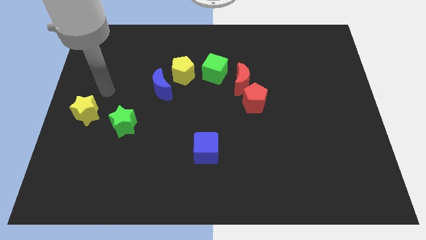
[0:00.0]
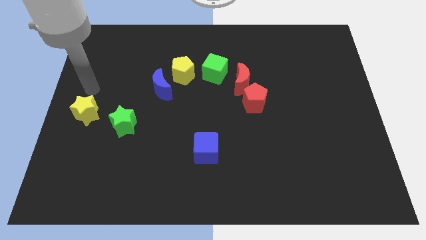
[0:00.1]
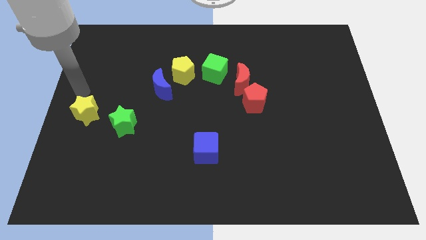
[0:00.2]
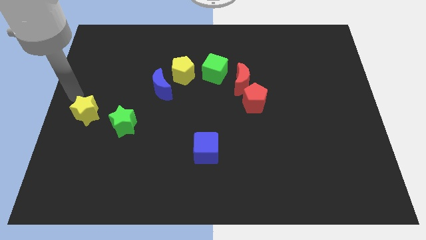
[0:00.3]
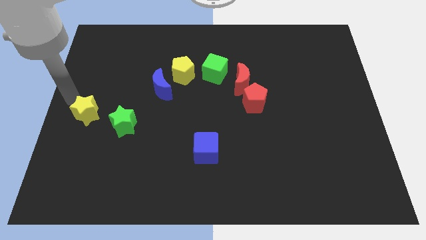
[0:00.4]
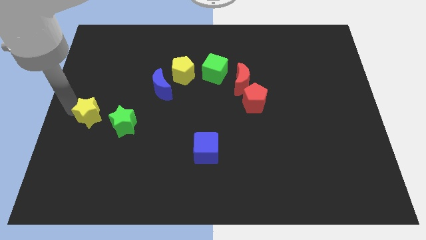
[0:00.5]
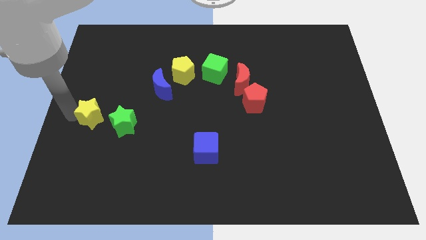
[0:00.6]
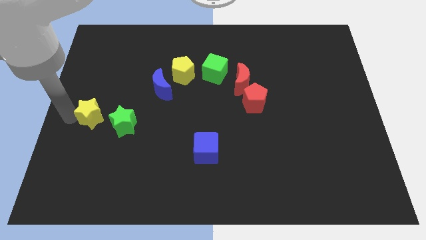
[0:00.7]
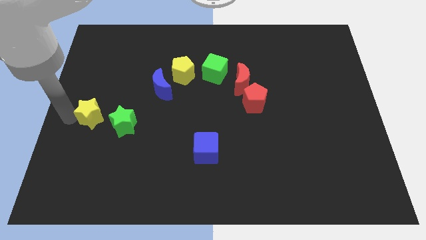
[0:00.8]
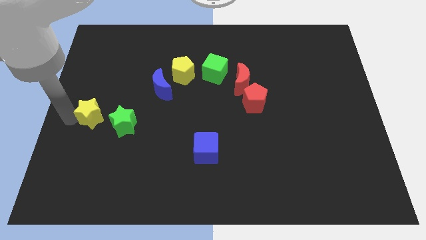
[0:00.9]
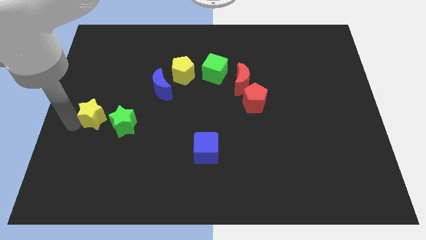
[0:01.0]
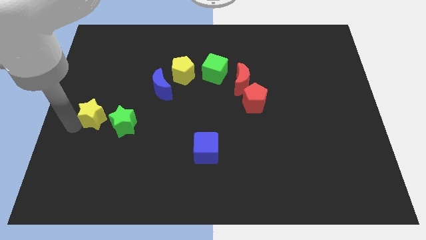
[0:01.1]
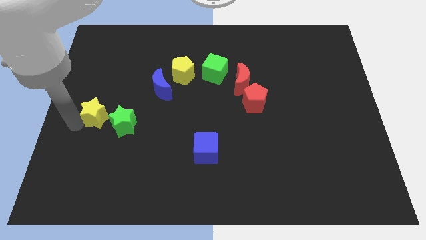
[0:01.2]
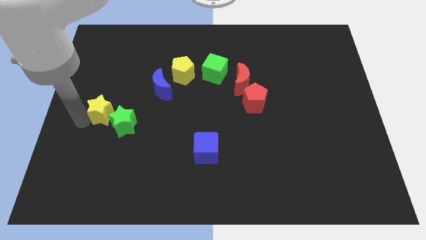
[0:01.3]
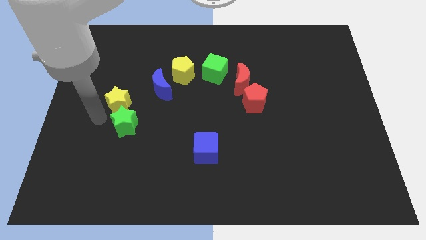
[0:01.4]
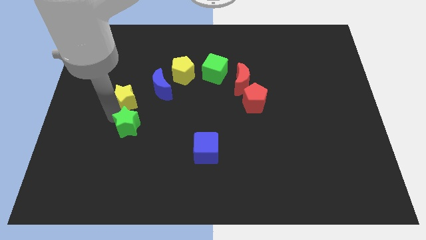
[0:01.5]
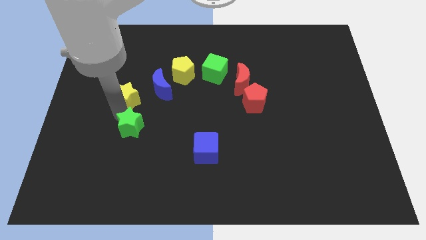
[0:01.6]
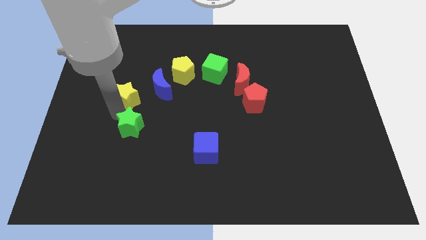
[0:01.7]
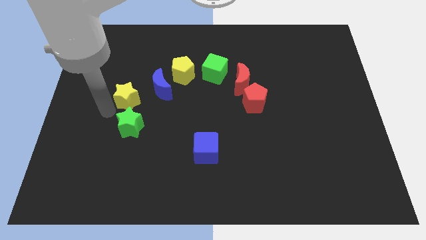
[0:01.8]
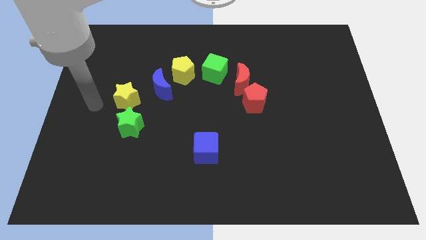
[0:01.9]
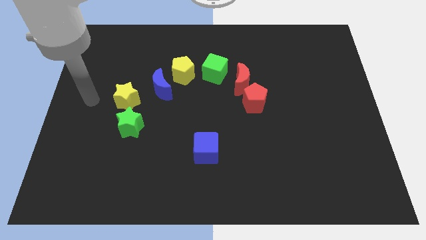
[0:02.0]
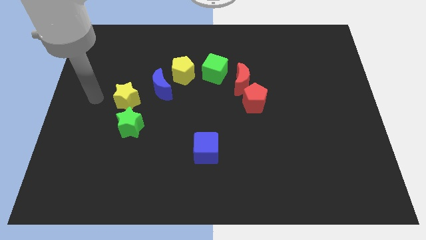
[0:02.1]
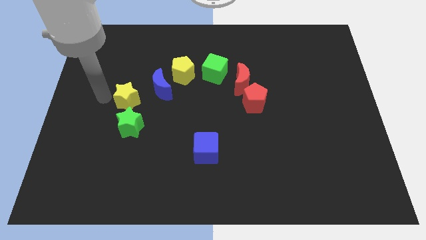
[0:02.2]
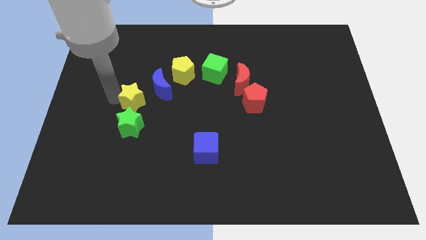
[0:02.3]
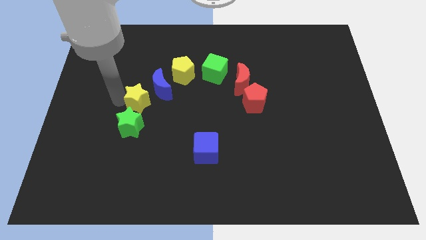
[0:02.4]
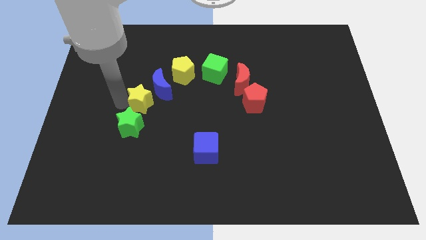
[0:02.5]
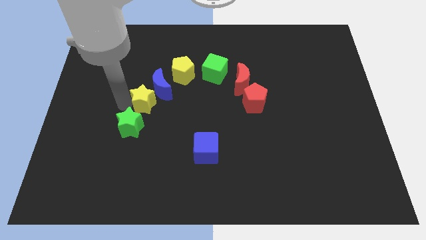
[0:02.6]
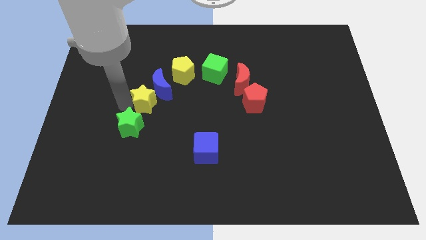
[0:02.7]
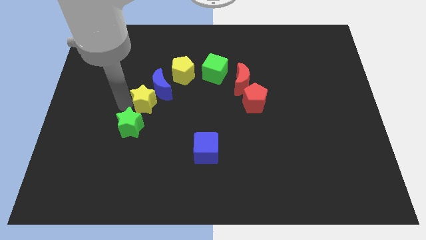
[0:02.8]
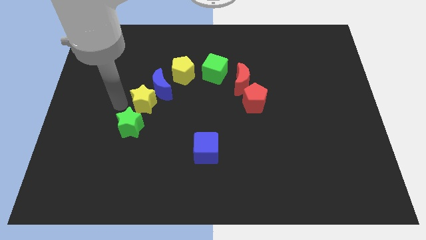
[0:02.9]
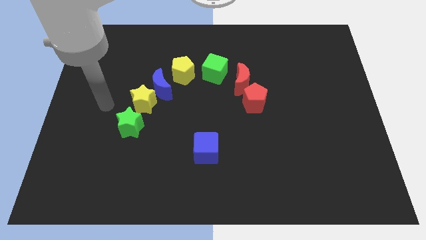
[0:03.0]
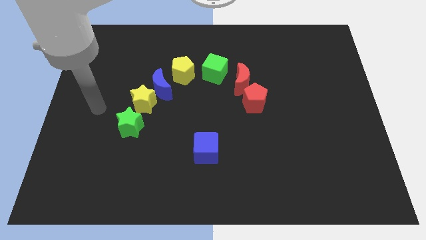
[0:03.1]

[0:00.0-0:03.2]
slide yellow star on top green star

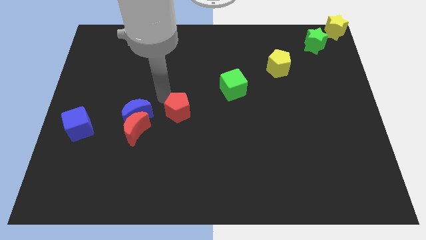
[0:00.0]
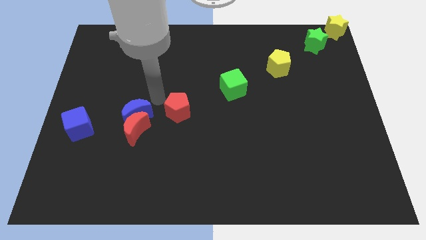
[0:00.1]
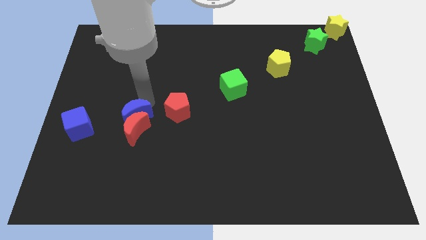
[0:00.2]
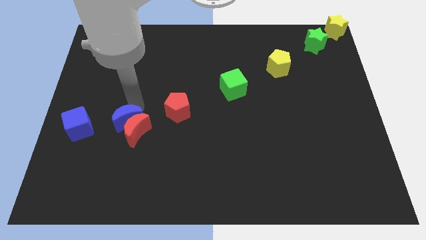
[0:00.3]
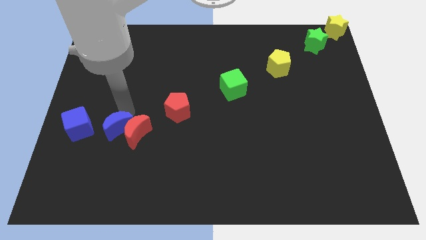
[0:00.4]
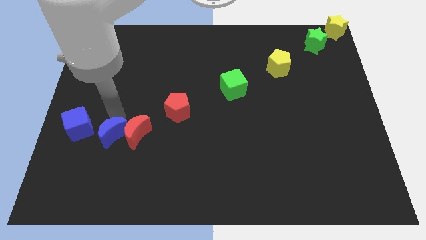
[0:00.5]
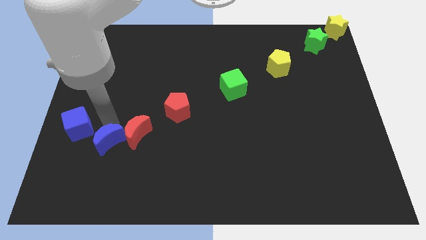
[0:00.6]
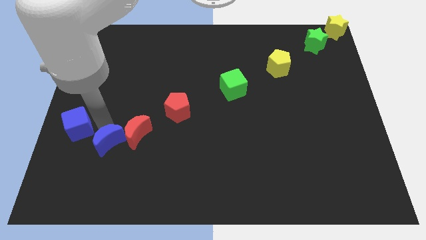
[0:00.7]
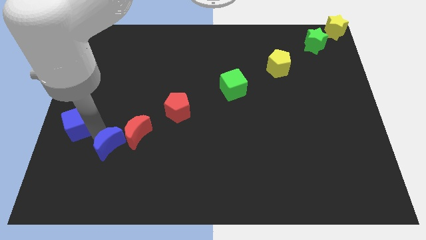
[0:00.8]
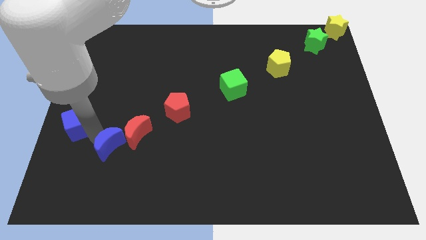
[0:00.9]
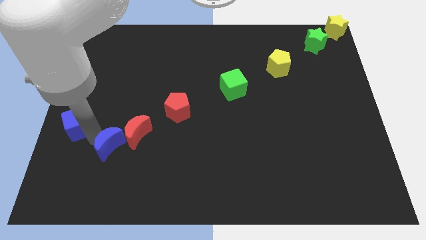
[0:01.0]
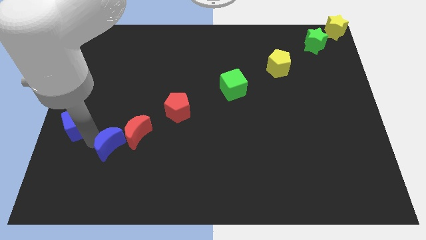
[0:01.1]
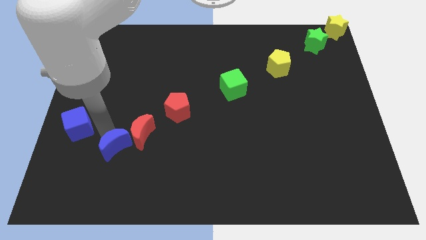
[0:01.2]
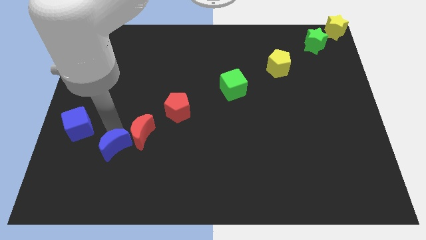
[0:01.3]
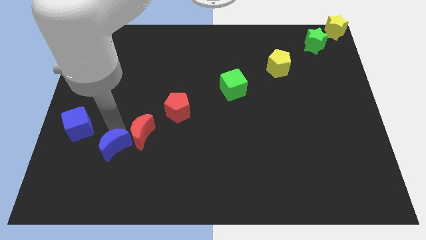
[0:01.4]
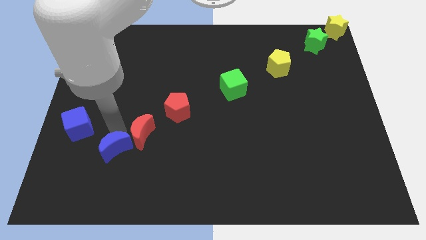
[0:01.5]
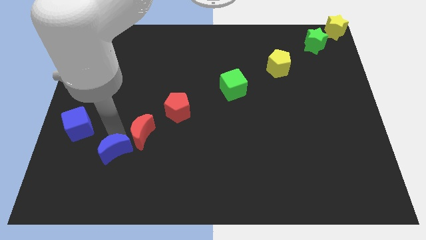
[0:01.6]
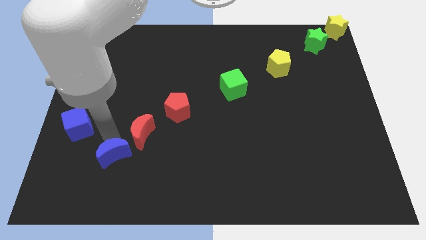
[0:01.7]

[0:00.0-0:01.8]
separate the blue crescent from the red crescent

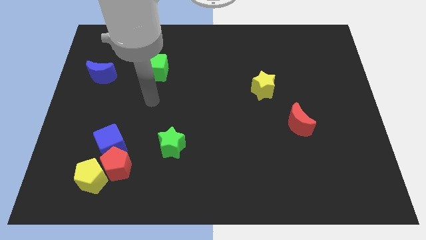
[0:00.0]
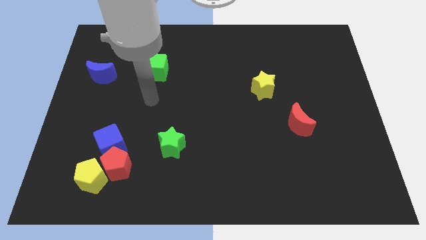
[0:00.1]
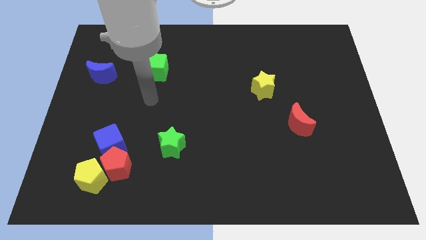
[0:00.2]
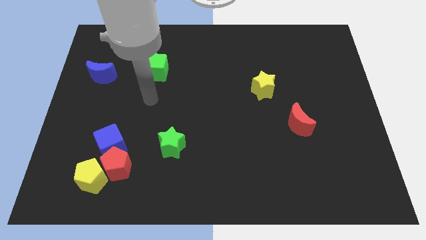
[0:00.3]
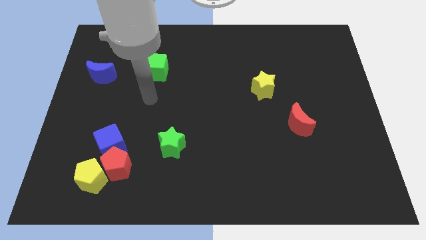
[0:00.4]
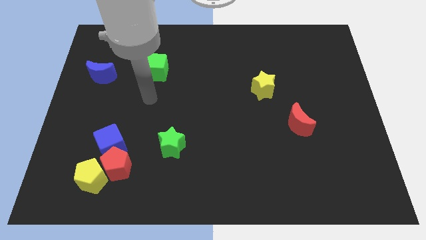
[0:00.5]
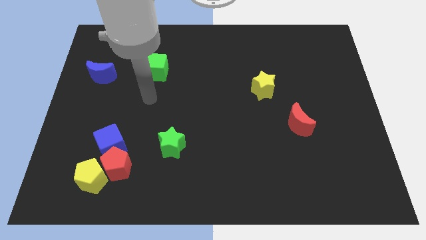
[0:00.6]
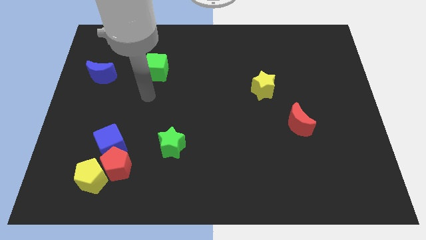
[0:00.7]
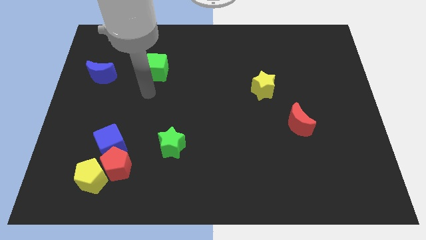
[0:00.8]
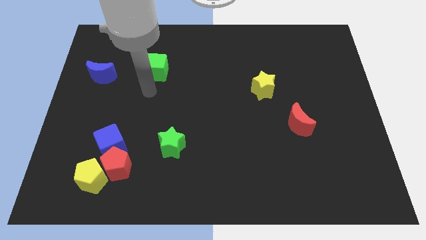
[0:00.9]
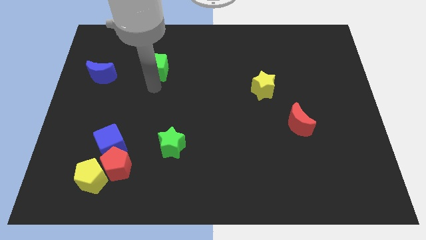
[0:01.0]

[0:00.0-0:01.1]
move your arm close to the green cube

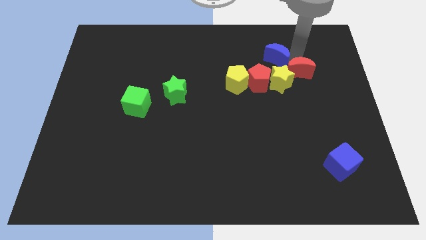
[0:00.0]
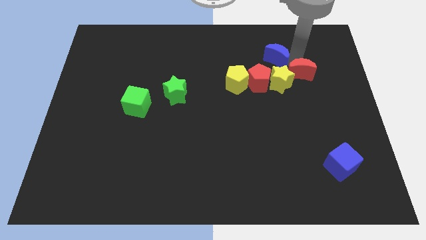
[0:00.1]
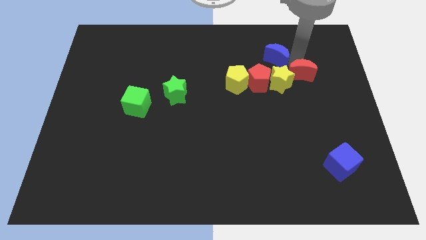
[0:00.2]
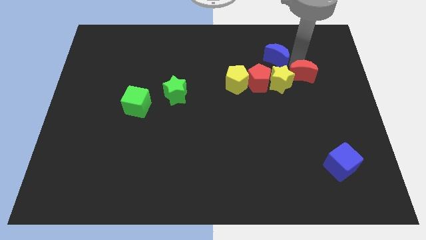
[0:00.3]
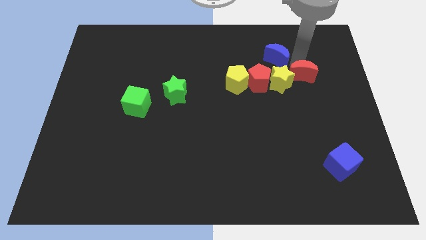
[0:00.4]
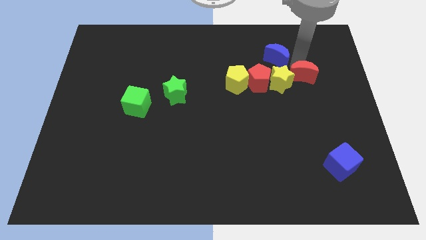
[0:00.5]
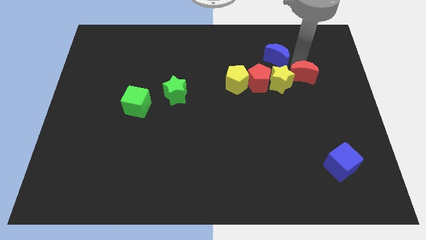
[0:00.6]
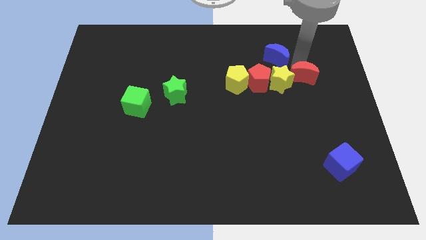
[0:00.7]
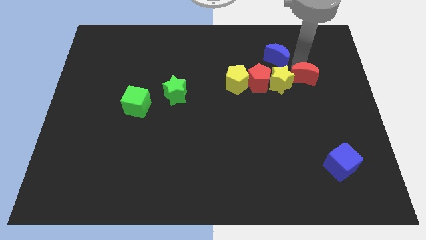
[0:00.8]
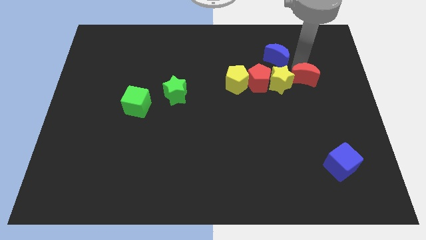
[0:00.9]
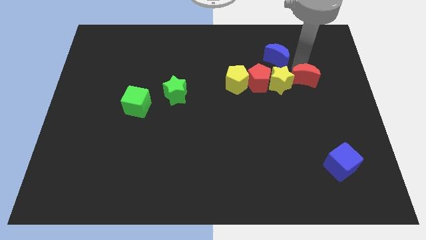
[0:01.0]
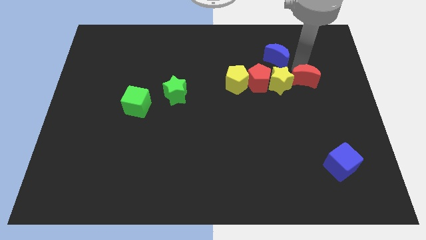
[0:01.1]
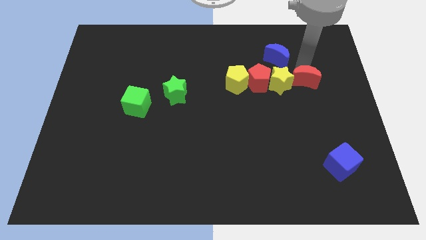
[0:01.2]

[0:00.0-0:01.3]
place red crescent right of yellow star

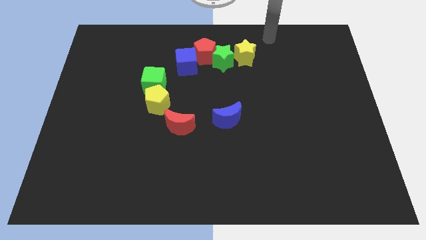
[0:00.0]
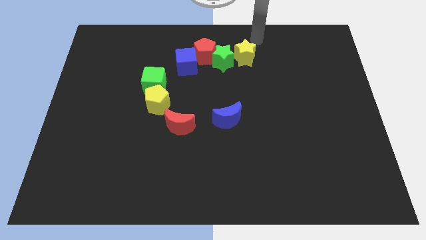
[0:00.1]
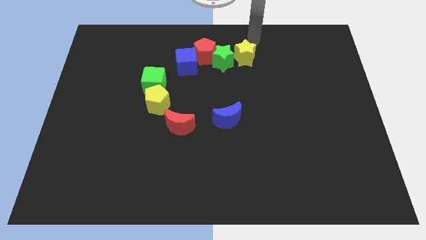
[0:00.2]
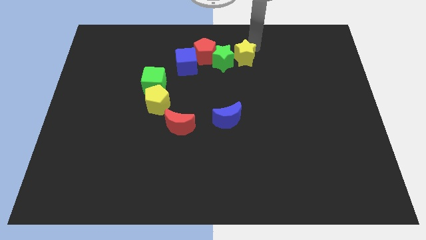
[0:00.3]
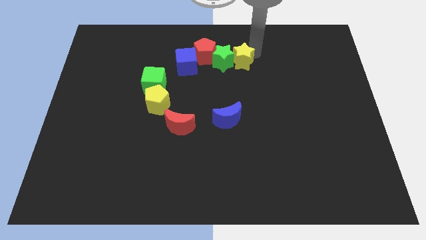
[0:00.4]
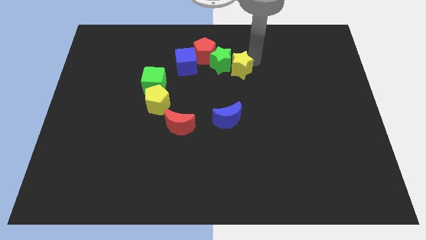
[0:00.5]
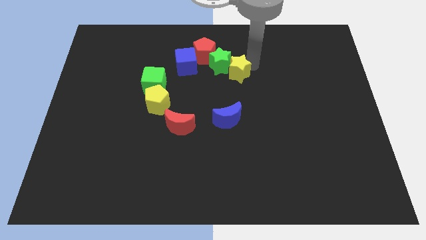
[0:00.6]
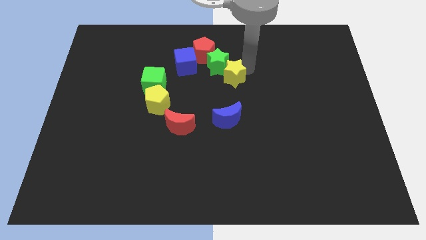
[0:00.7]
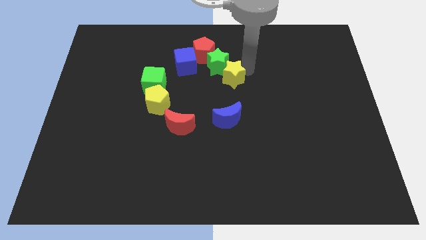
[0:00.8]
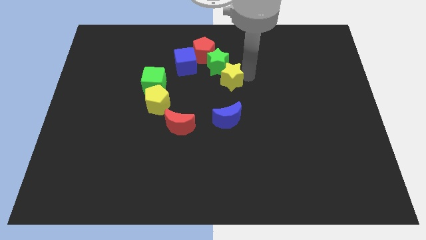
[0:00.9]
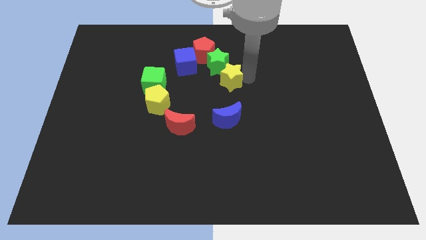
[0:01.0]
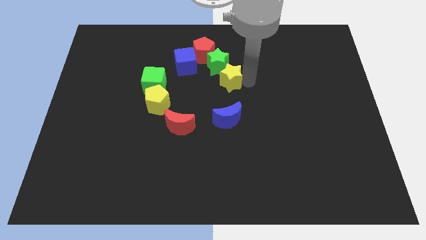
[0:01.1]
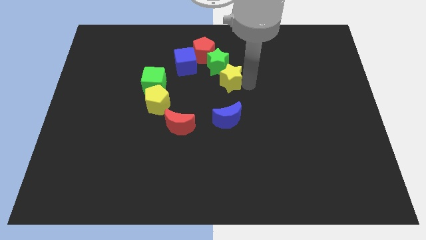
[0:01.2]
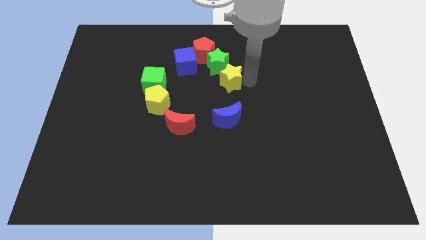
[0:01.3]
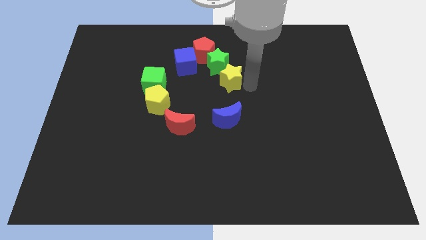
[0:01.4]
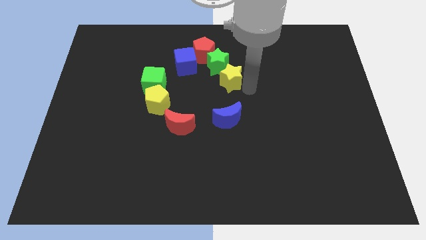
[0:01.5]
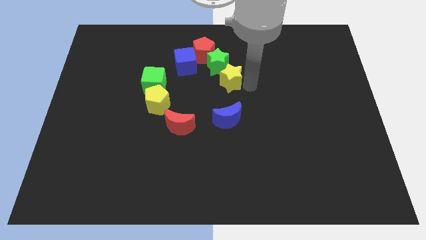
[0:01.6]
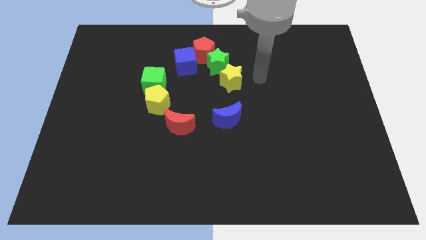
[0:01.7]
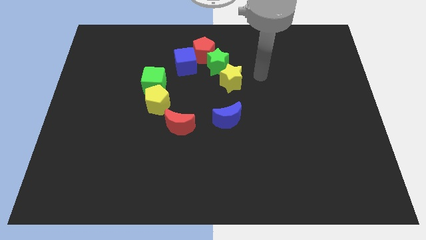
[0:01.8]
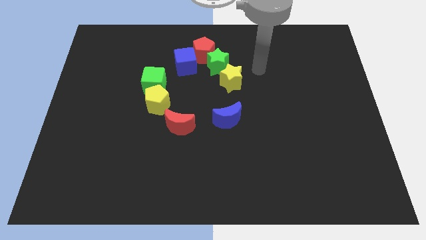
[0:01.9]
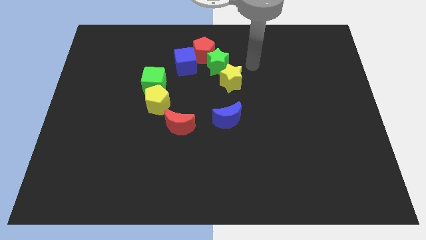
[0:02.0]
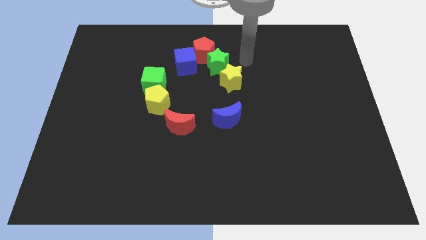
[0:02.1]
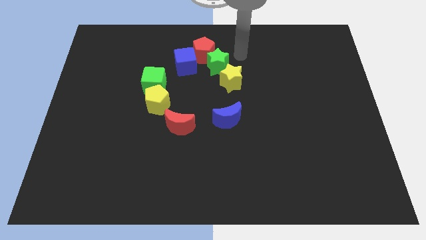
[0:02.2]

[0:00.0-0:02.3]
push the yellow star towards the top of the blue moon
